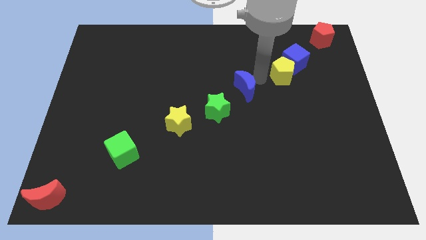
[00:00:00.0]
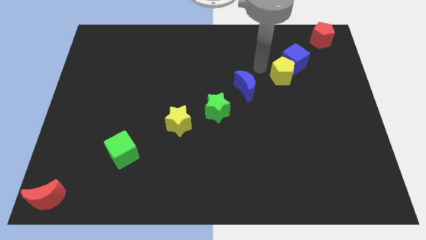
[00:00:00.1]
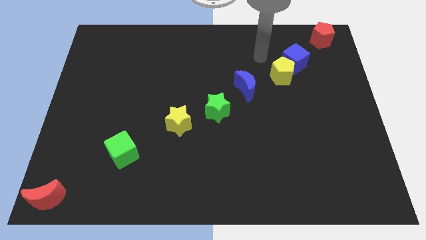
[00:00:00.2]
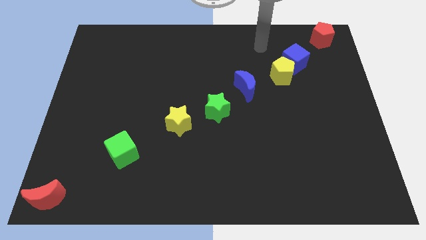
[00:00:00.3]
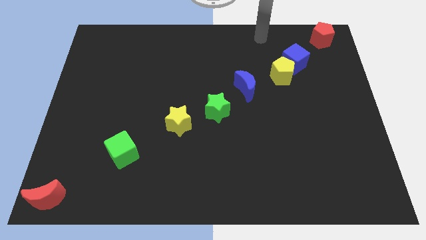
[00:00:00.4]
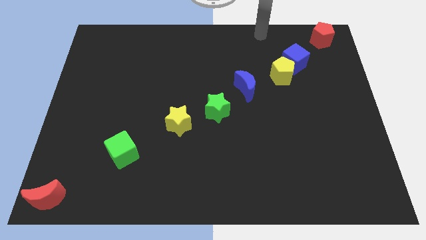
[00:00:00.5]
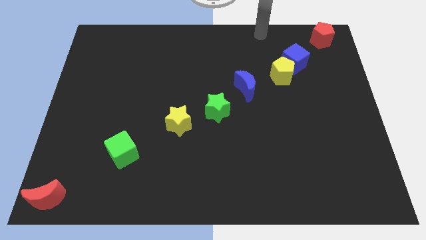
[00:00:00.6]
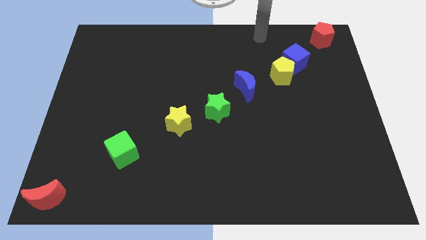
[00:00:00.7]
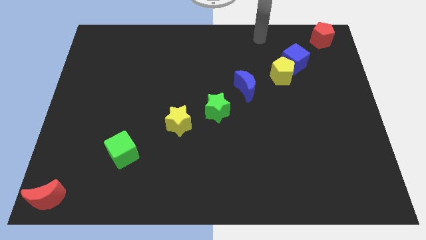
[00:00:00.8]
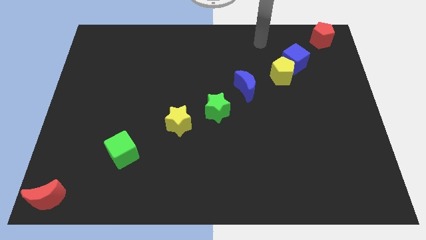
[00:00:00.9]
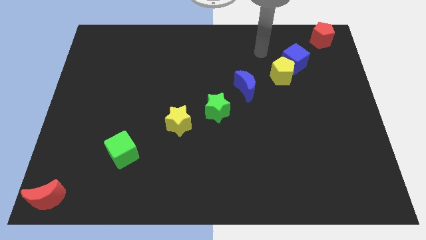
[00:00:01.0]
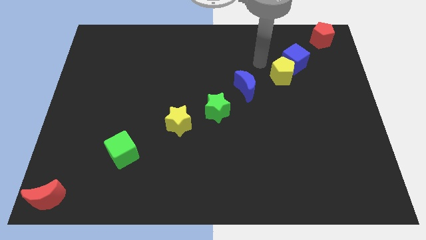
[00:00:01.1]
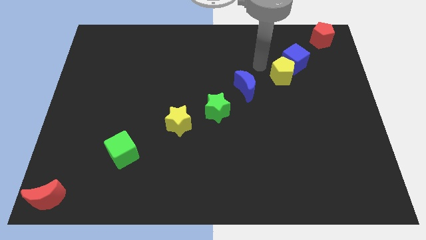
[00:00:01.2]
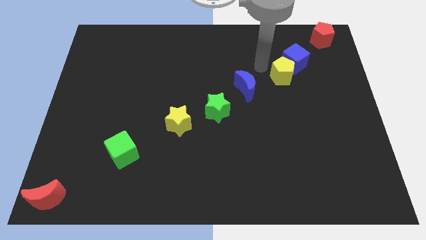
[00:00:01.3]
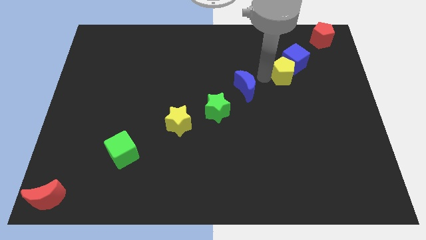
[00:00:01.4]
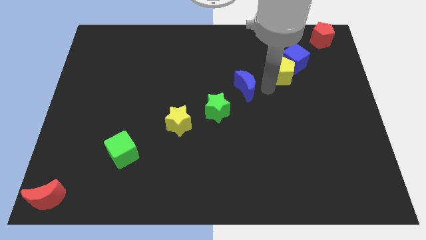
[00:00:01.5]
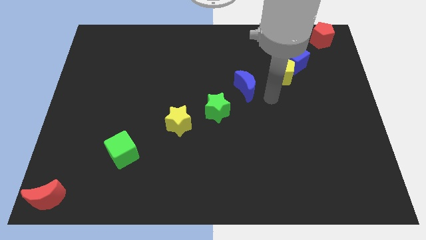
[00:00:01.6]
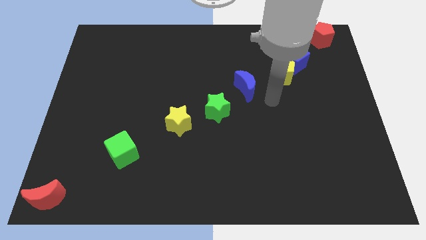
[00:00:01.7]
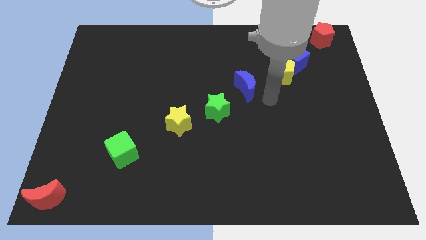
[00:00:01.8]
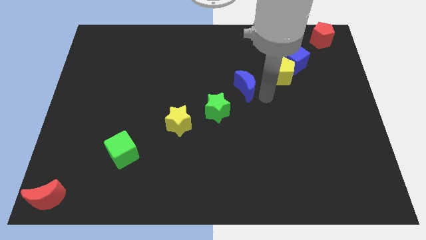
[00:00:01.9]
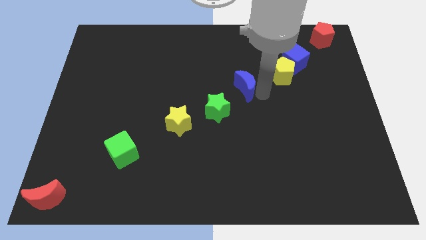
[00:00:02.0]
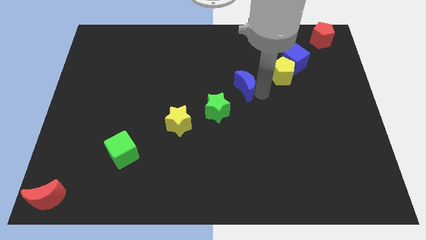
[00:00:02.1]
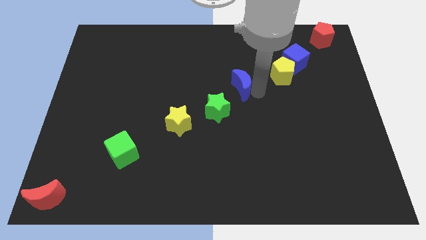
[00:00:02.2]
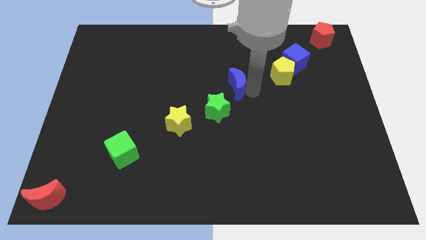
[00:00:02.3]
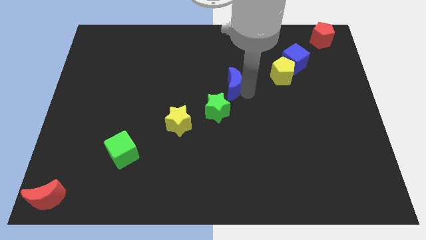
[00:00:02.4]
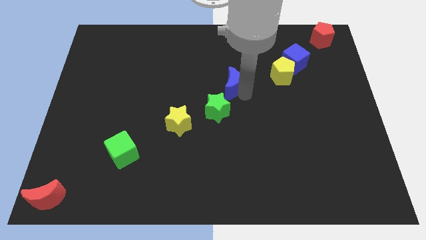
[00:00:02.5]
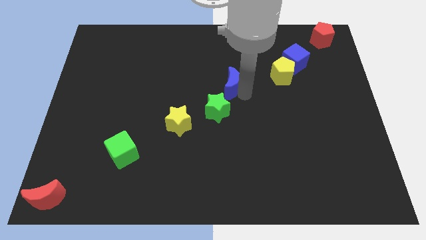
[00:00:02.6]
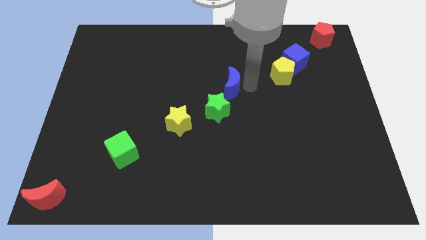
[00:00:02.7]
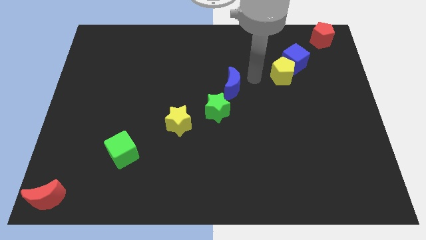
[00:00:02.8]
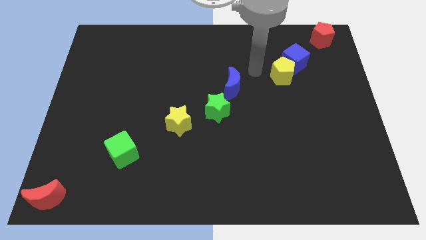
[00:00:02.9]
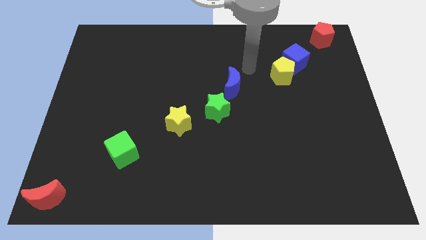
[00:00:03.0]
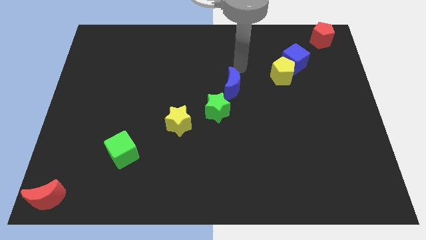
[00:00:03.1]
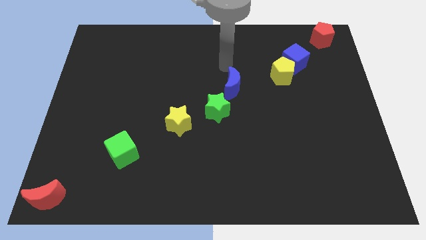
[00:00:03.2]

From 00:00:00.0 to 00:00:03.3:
move away the blue crescent from yellow pentagon

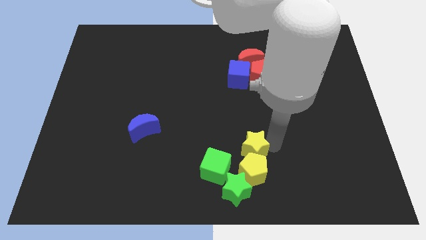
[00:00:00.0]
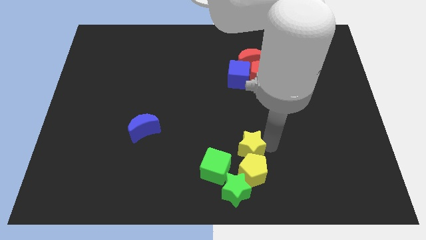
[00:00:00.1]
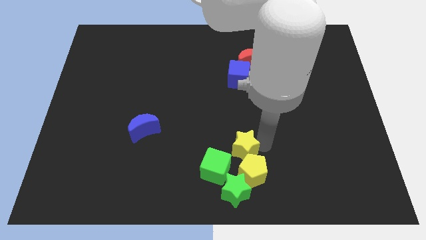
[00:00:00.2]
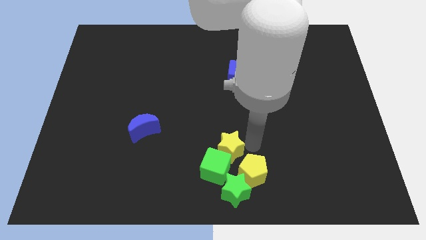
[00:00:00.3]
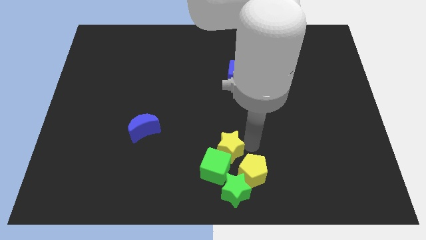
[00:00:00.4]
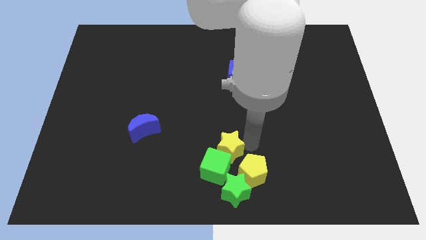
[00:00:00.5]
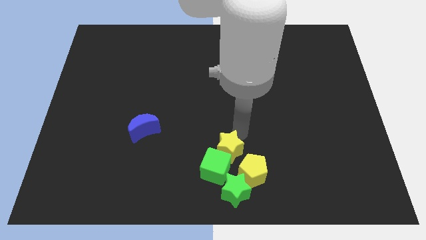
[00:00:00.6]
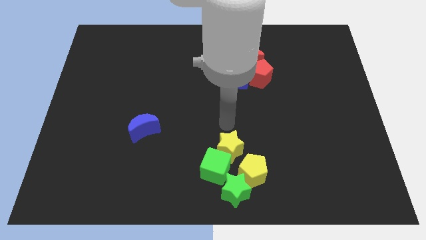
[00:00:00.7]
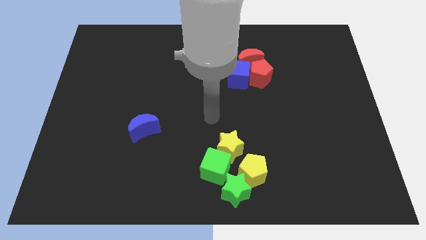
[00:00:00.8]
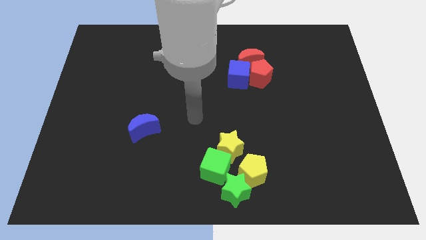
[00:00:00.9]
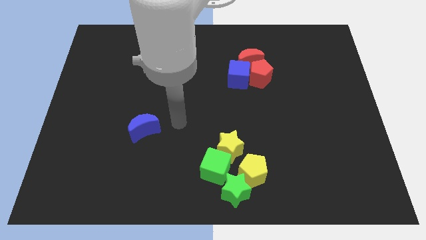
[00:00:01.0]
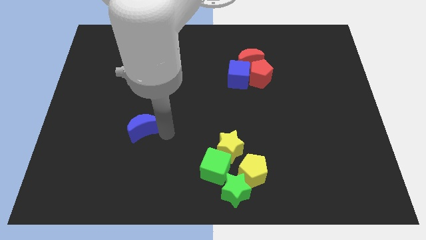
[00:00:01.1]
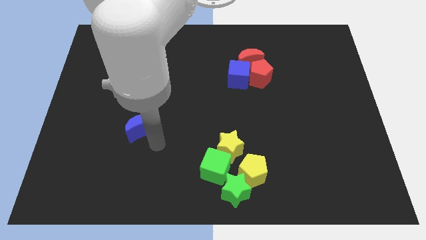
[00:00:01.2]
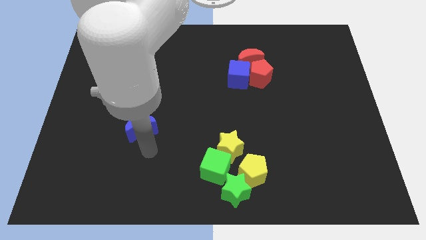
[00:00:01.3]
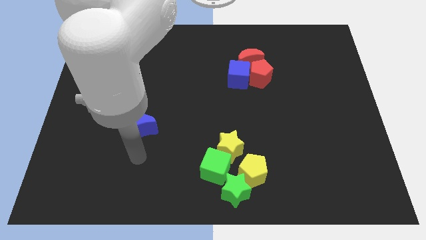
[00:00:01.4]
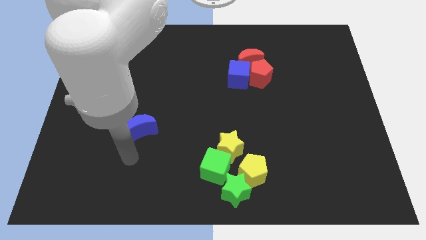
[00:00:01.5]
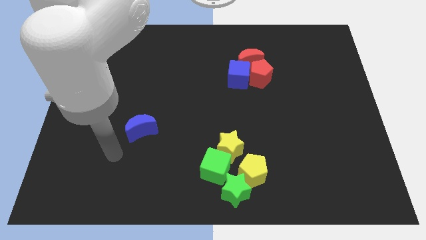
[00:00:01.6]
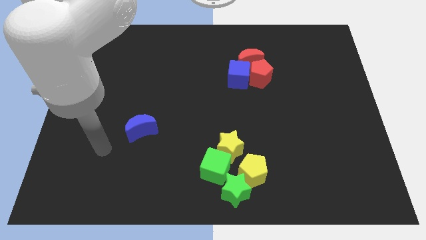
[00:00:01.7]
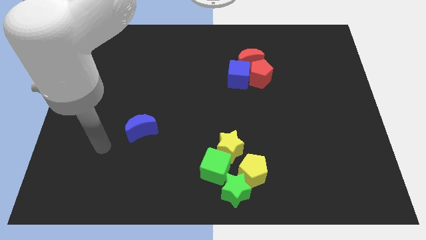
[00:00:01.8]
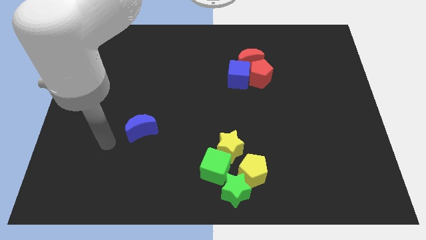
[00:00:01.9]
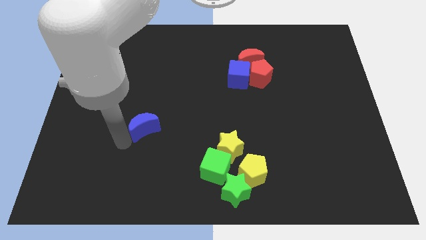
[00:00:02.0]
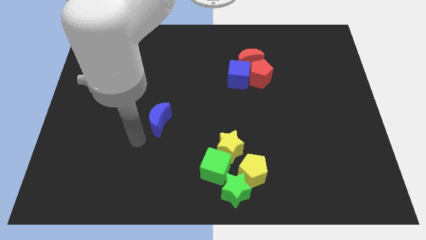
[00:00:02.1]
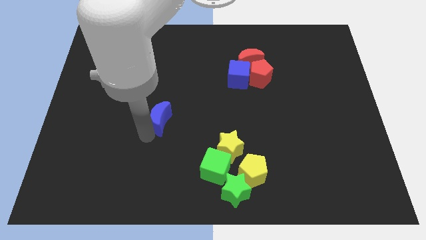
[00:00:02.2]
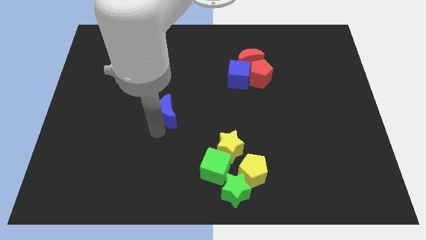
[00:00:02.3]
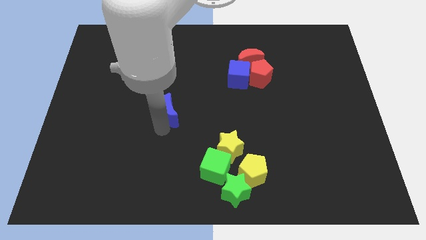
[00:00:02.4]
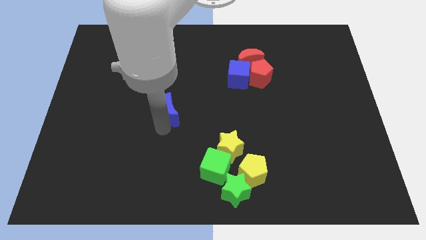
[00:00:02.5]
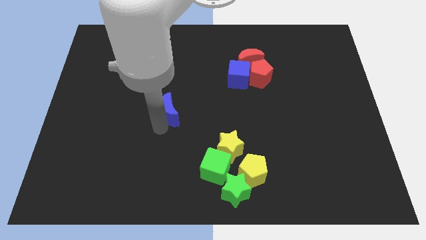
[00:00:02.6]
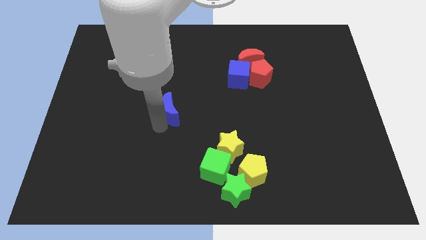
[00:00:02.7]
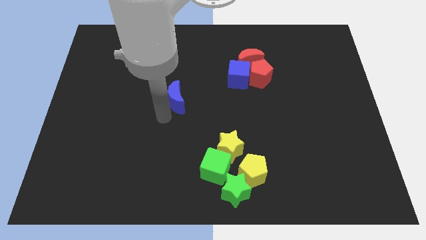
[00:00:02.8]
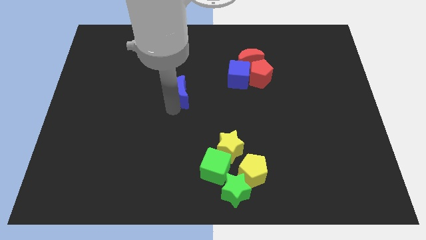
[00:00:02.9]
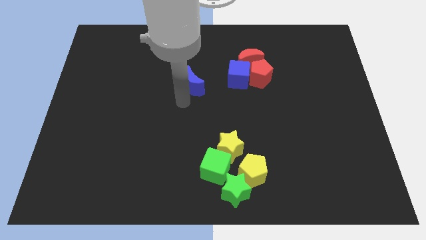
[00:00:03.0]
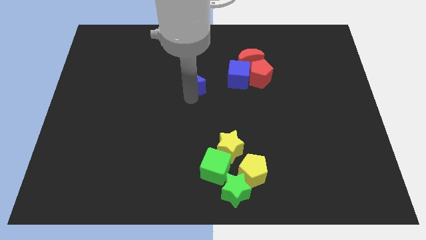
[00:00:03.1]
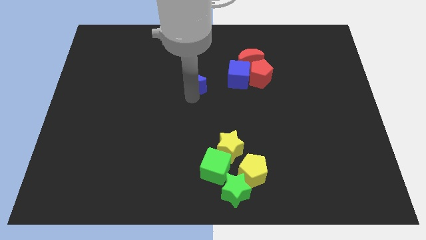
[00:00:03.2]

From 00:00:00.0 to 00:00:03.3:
place the blue moon towards the bottom left of the blue cube

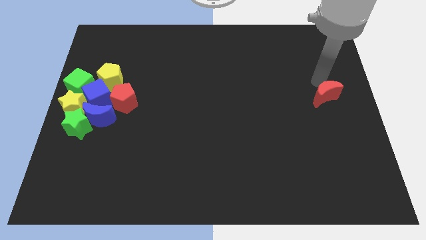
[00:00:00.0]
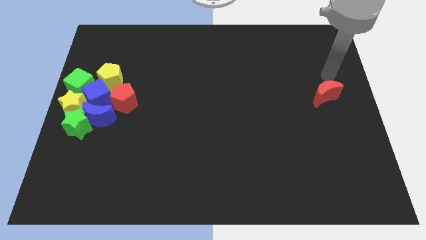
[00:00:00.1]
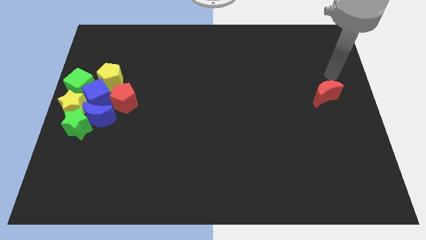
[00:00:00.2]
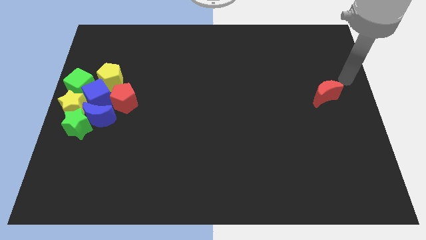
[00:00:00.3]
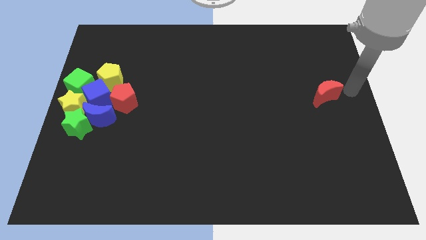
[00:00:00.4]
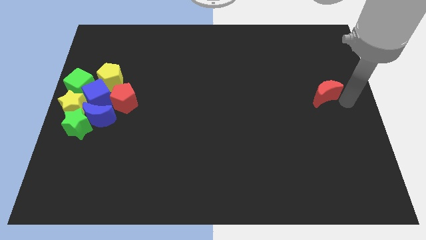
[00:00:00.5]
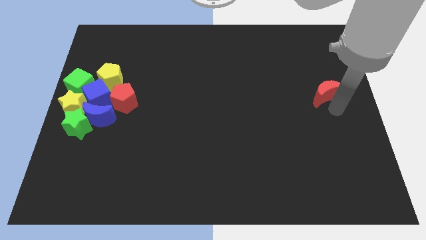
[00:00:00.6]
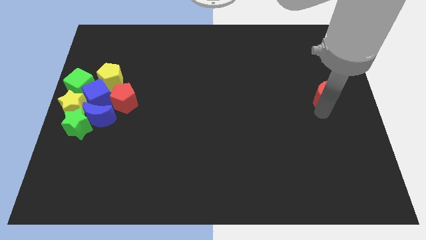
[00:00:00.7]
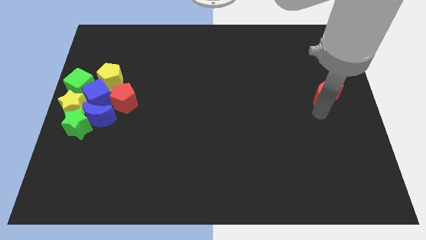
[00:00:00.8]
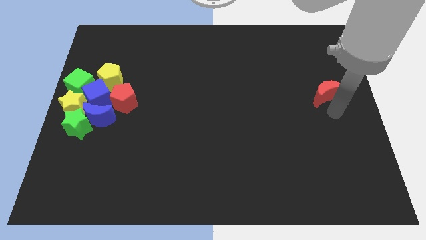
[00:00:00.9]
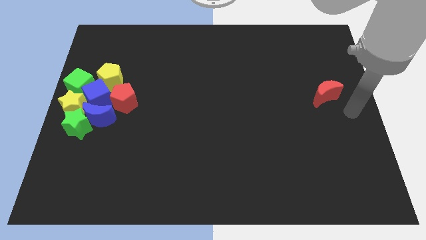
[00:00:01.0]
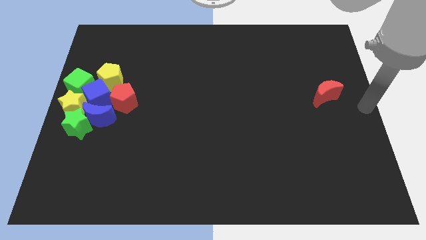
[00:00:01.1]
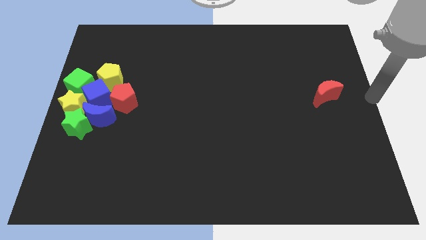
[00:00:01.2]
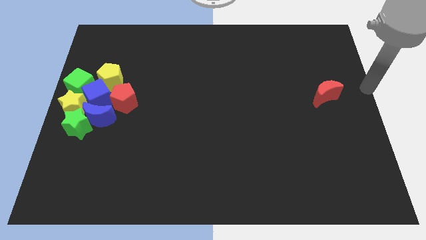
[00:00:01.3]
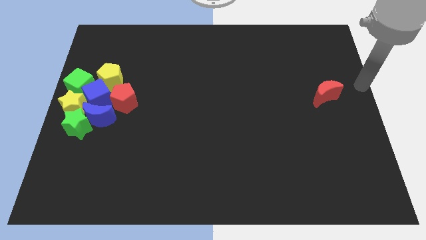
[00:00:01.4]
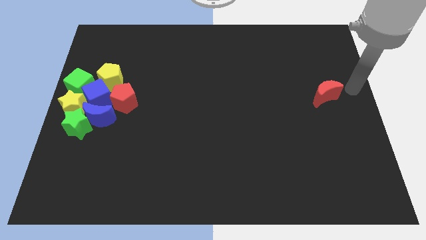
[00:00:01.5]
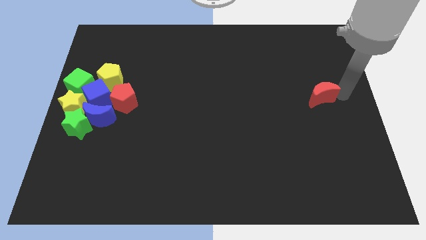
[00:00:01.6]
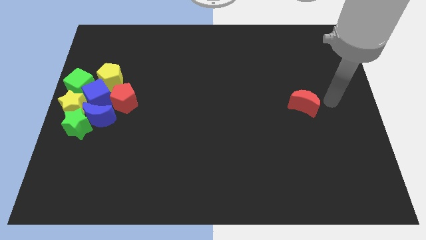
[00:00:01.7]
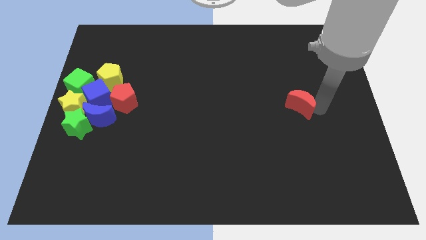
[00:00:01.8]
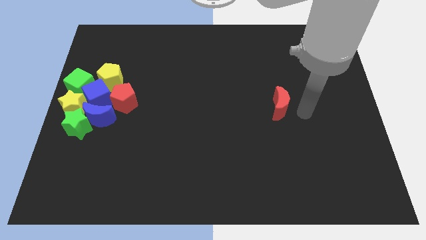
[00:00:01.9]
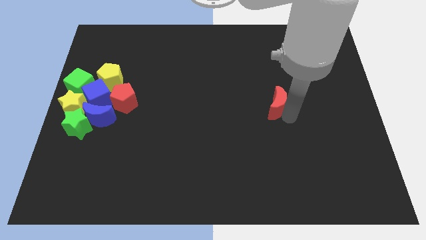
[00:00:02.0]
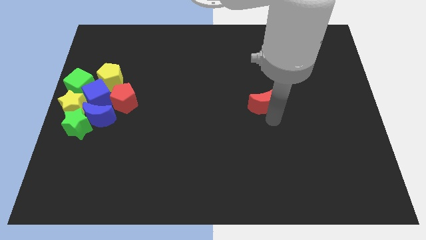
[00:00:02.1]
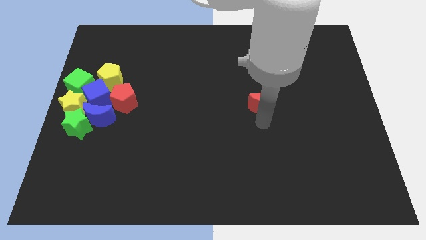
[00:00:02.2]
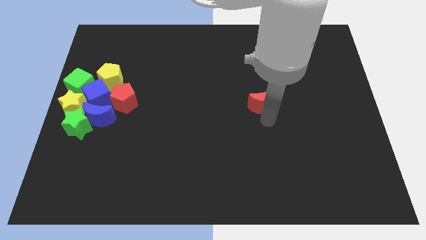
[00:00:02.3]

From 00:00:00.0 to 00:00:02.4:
place the red moon to the center from the right side
